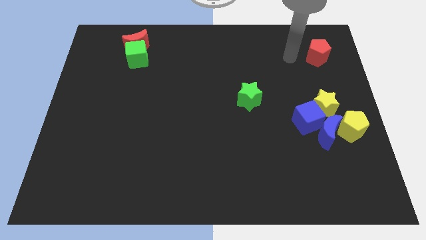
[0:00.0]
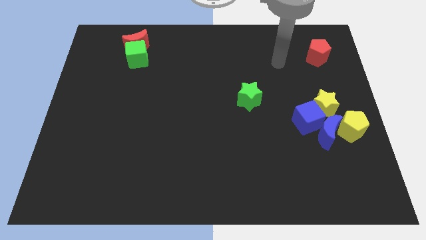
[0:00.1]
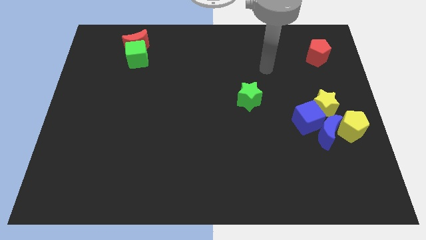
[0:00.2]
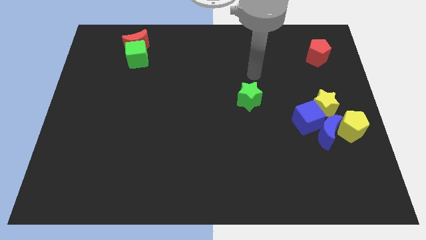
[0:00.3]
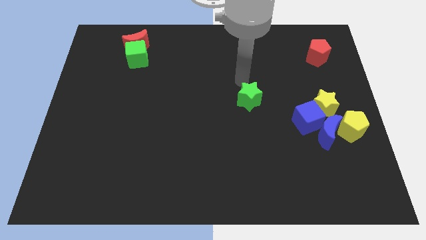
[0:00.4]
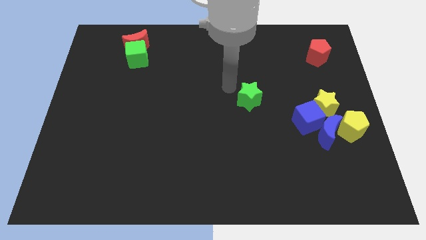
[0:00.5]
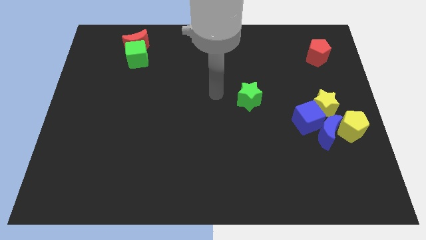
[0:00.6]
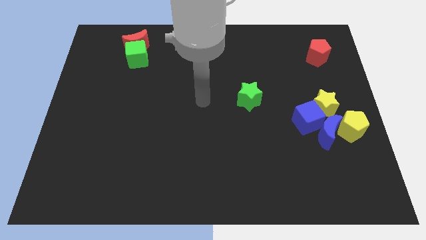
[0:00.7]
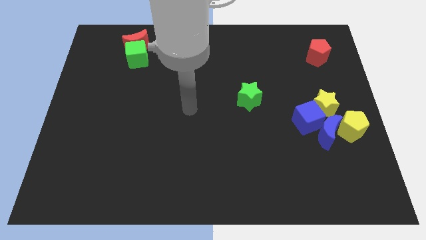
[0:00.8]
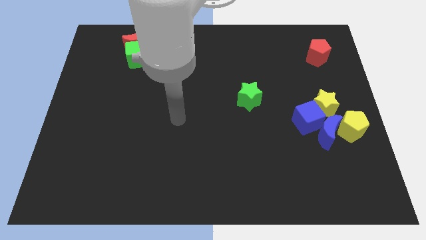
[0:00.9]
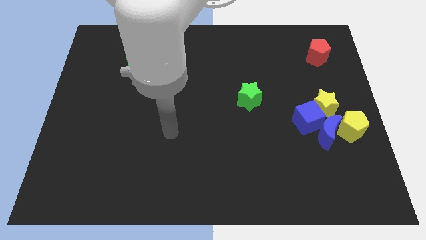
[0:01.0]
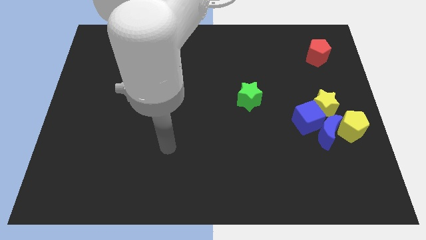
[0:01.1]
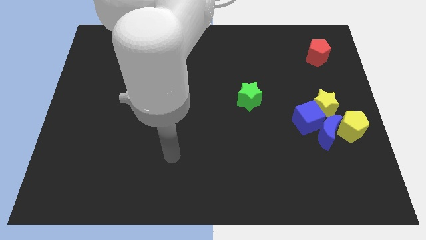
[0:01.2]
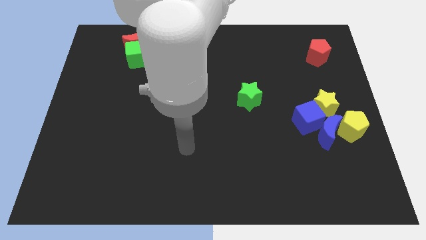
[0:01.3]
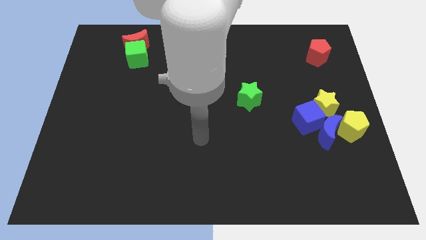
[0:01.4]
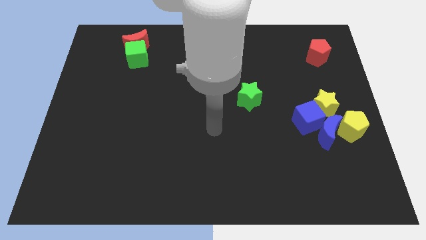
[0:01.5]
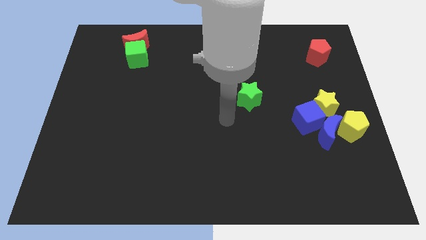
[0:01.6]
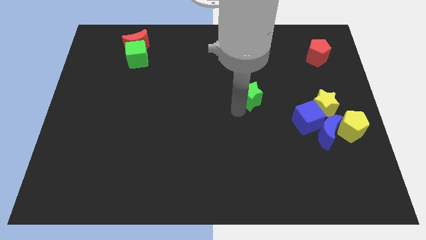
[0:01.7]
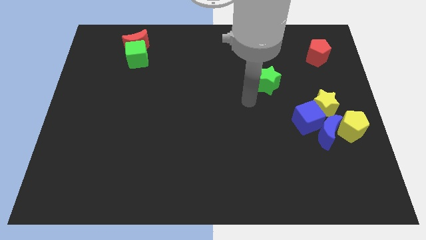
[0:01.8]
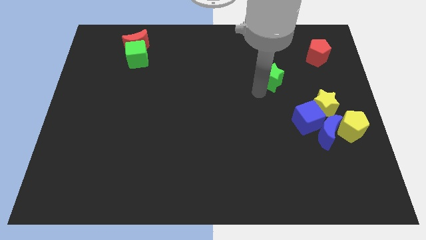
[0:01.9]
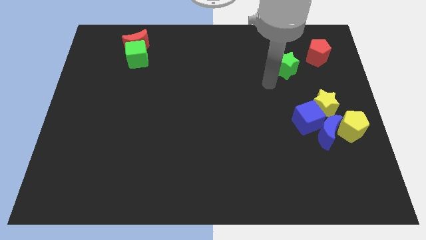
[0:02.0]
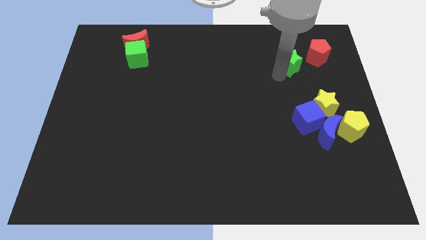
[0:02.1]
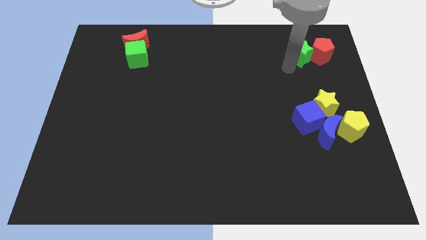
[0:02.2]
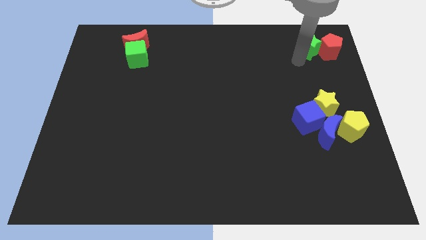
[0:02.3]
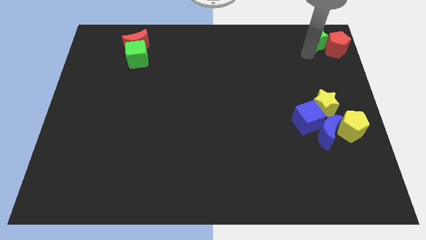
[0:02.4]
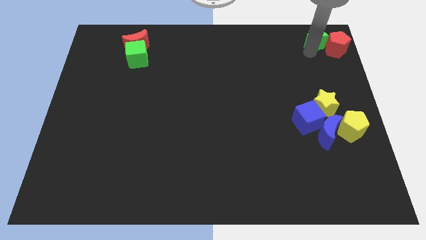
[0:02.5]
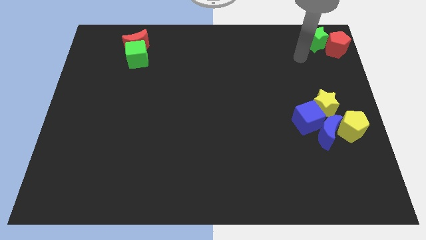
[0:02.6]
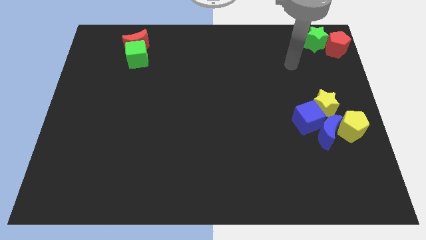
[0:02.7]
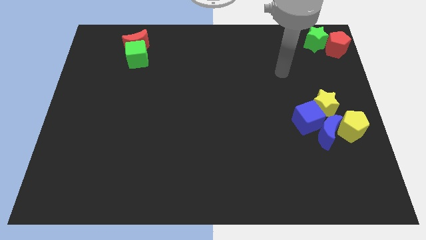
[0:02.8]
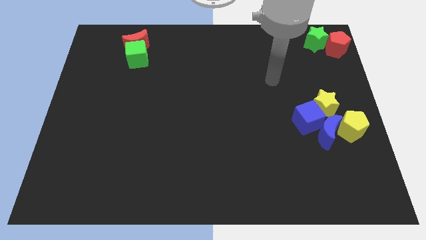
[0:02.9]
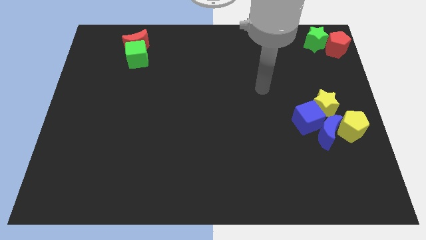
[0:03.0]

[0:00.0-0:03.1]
take the green star into the red pentagon

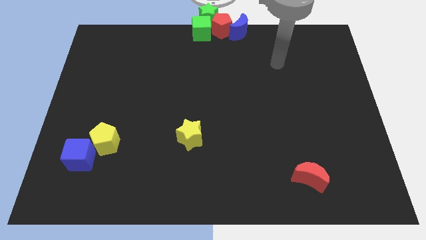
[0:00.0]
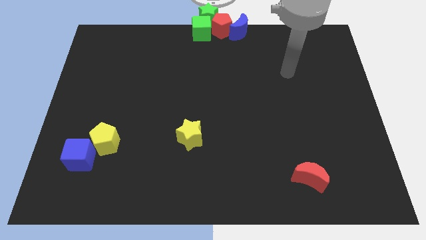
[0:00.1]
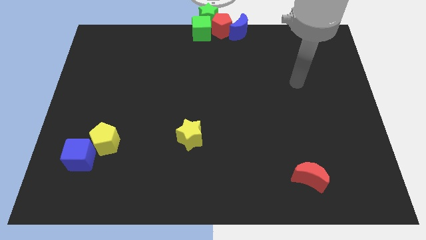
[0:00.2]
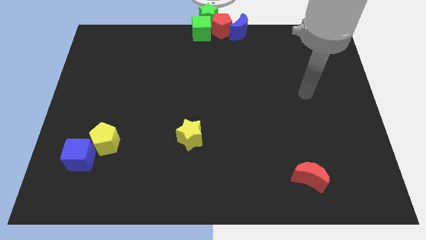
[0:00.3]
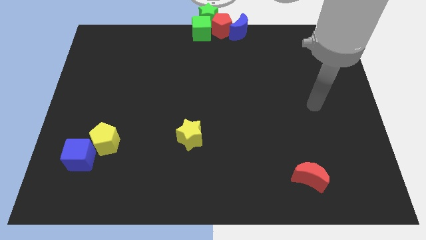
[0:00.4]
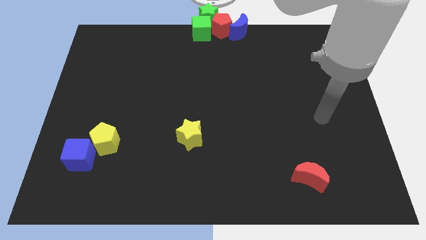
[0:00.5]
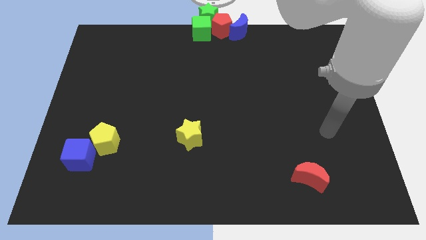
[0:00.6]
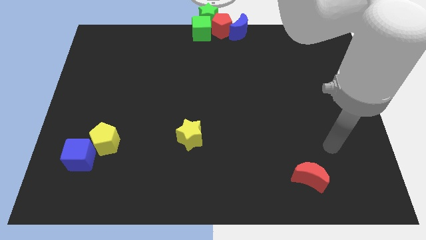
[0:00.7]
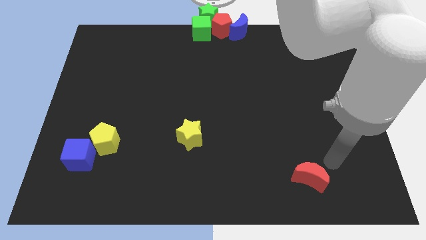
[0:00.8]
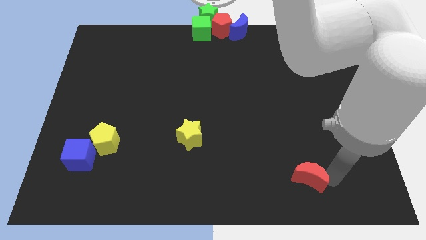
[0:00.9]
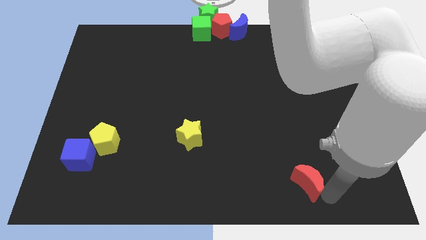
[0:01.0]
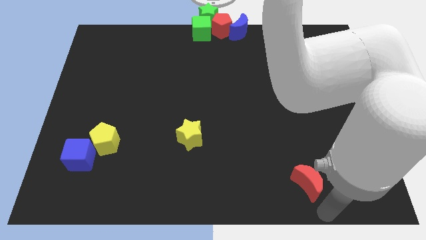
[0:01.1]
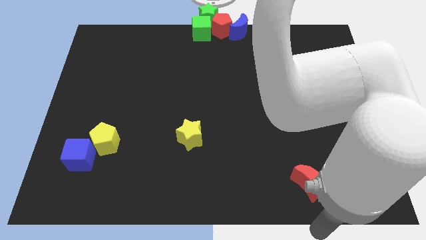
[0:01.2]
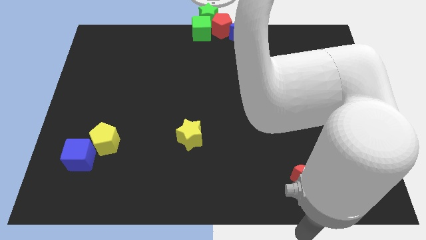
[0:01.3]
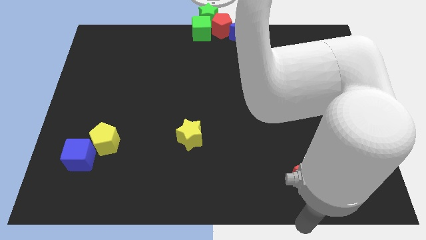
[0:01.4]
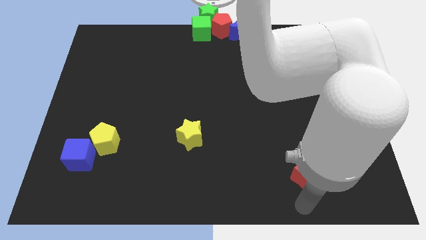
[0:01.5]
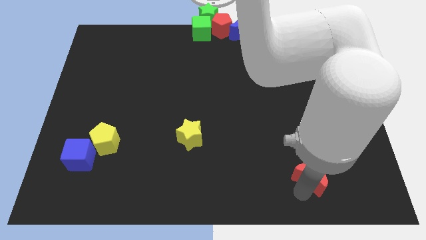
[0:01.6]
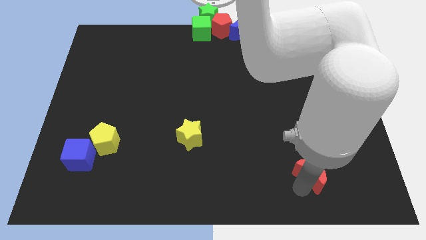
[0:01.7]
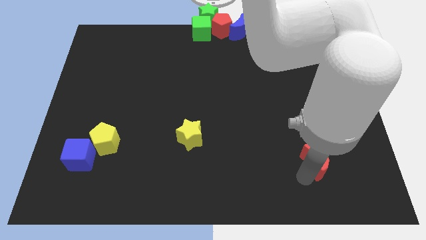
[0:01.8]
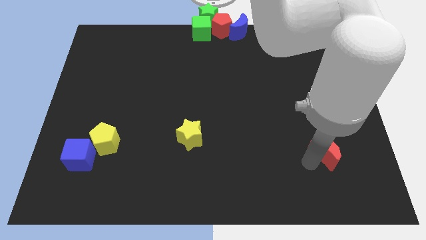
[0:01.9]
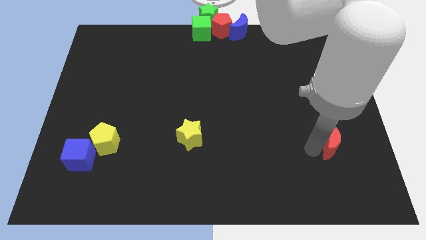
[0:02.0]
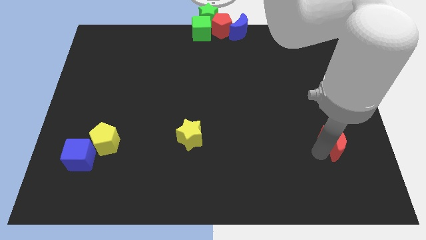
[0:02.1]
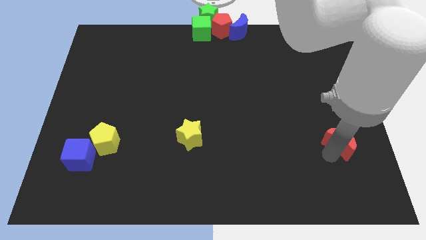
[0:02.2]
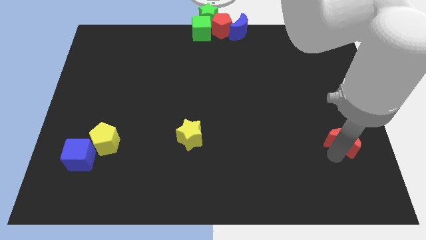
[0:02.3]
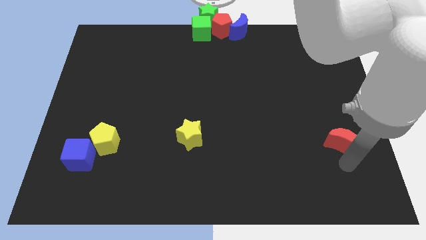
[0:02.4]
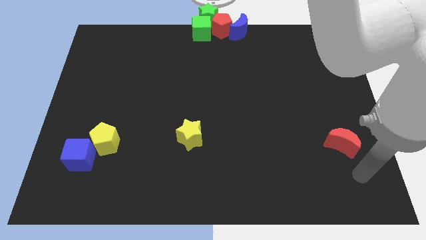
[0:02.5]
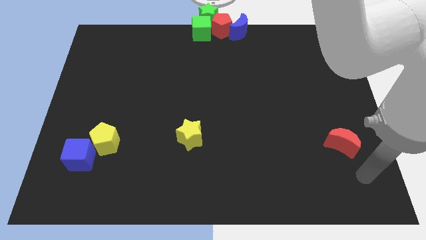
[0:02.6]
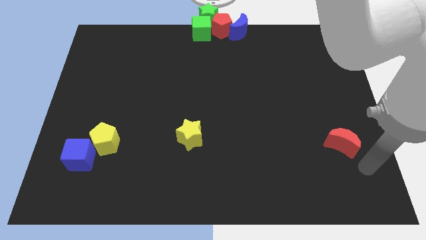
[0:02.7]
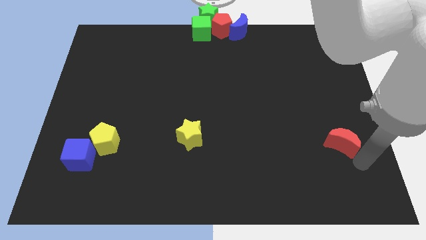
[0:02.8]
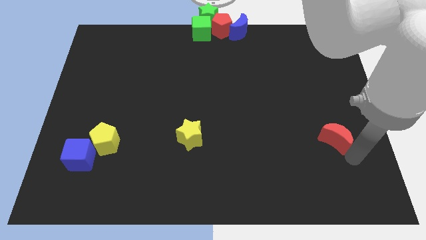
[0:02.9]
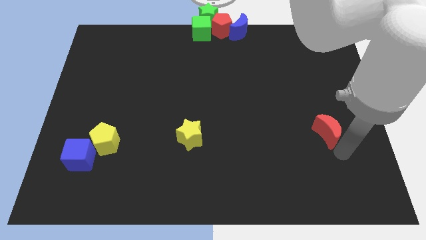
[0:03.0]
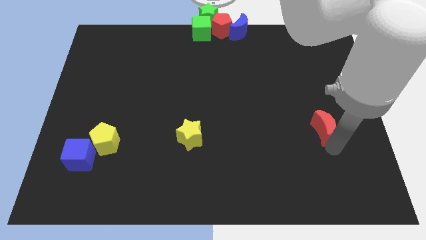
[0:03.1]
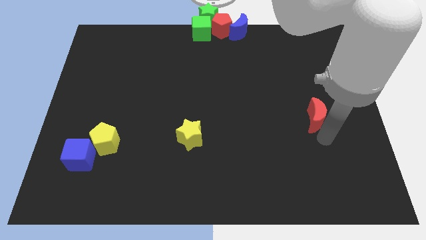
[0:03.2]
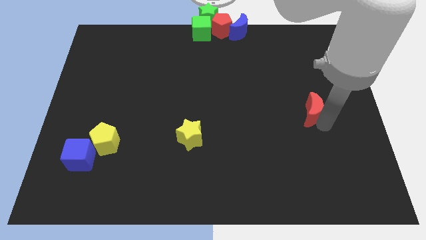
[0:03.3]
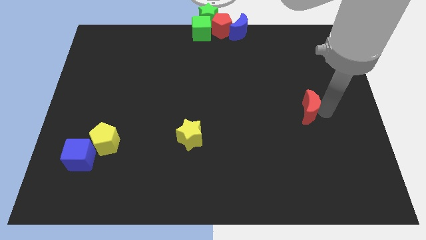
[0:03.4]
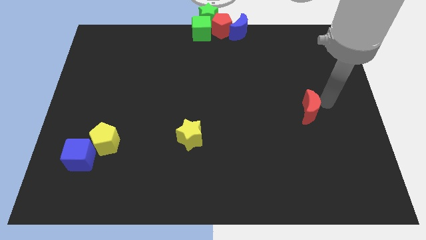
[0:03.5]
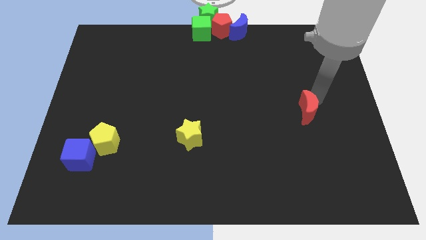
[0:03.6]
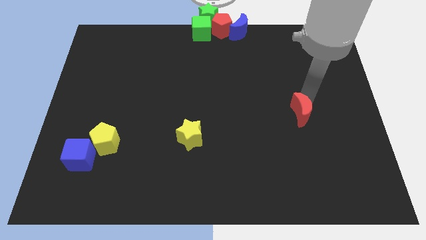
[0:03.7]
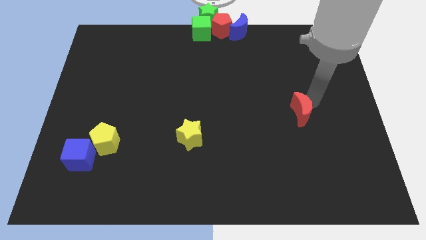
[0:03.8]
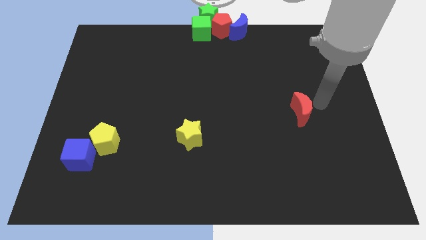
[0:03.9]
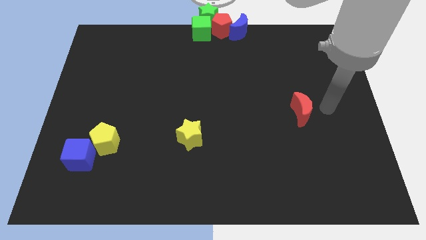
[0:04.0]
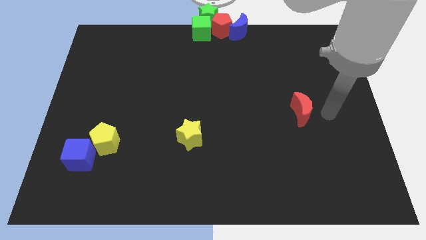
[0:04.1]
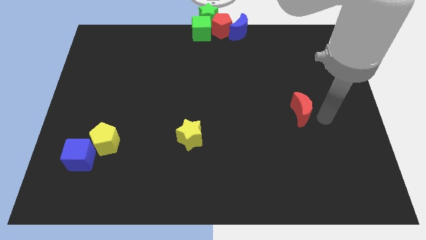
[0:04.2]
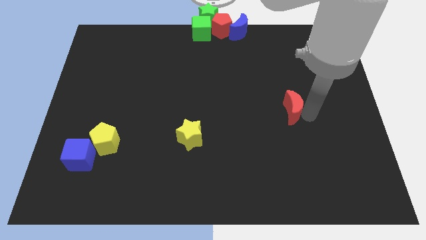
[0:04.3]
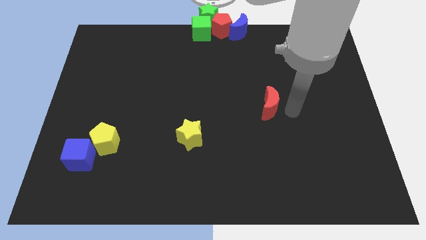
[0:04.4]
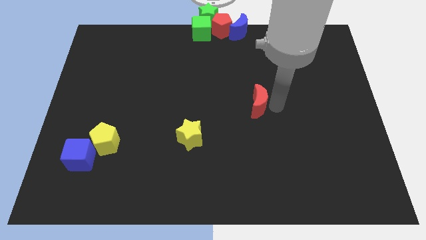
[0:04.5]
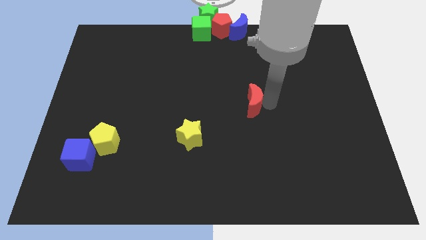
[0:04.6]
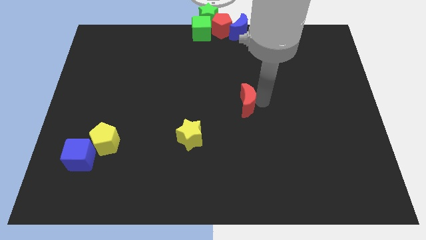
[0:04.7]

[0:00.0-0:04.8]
move the red crescent to the center of the board

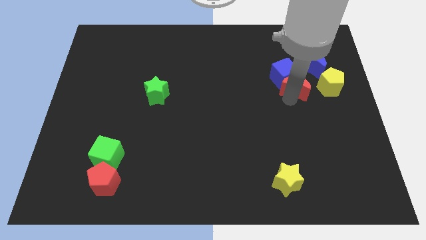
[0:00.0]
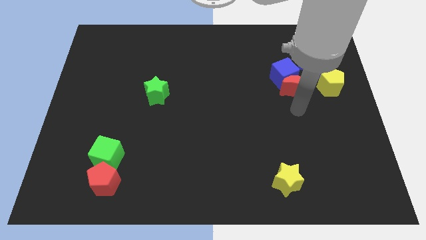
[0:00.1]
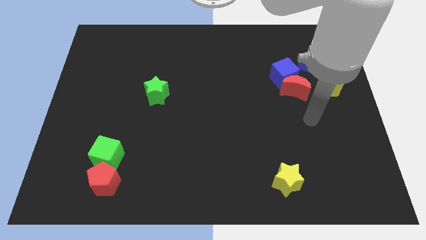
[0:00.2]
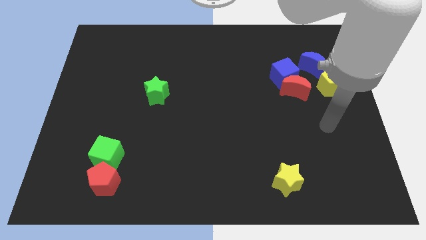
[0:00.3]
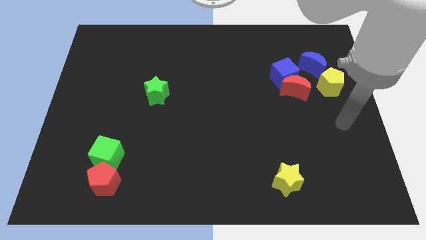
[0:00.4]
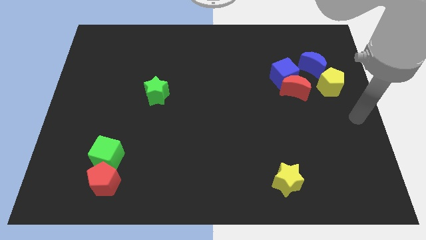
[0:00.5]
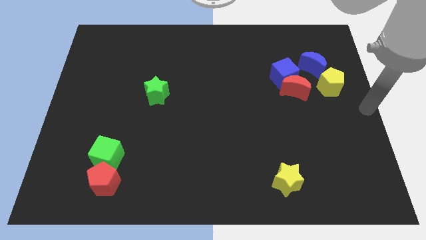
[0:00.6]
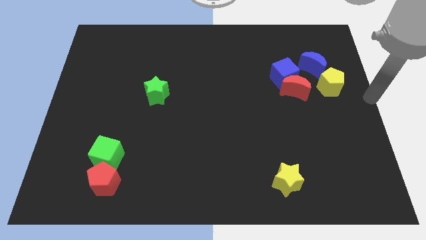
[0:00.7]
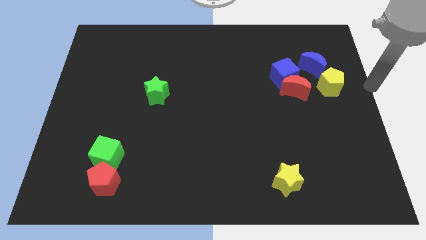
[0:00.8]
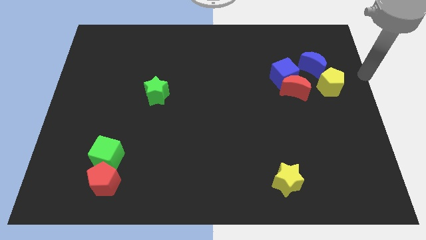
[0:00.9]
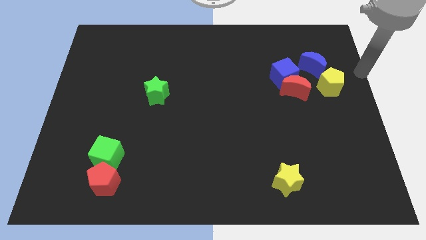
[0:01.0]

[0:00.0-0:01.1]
move your hand away from red moon
